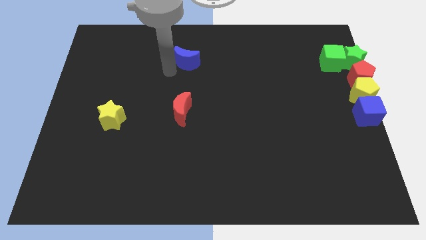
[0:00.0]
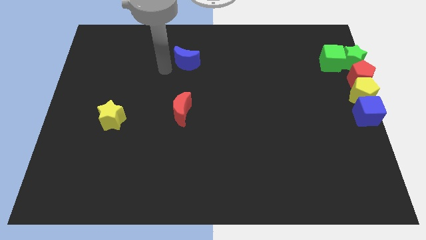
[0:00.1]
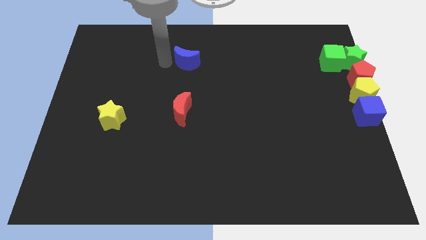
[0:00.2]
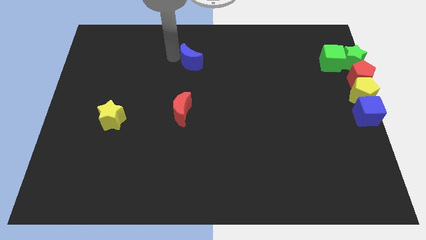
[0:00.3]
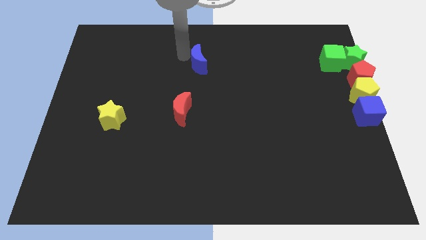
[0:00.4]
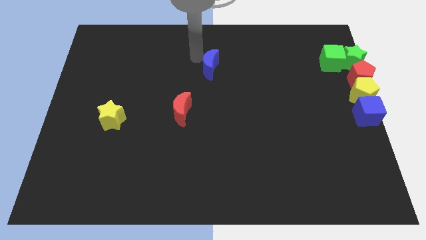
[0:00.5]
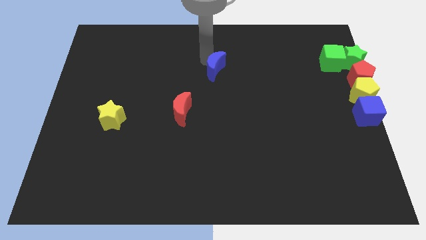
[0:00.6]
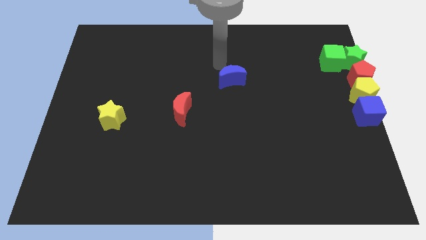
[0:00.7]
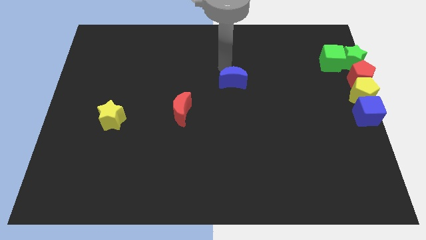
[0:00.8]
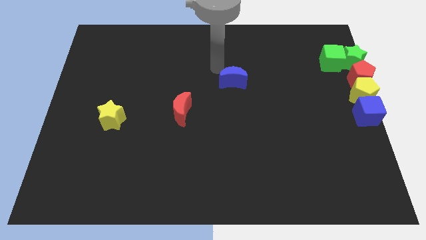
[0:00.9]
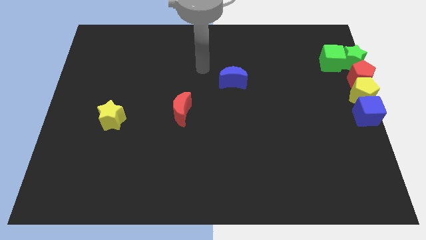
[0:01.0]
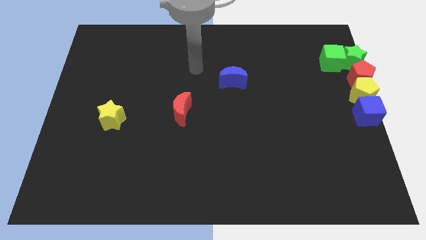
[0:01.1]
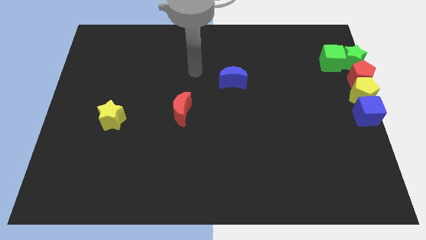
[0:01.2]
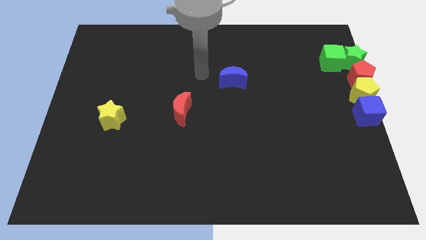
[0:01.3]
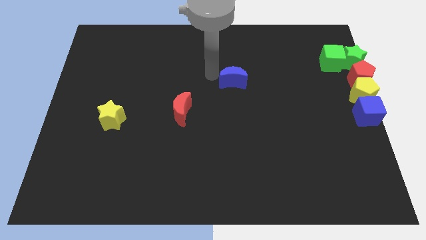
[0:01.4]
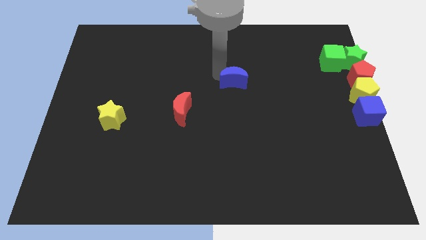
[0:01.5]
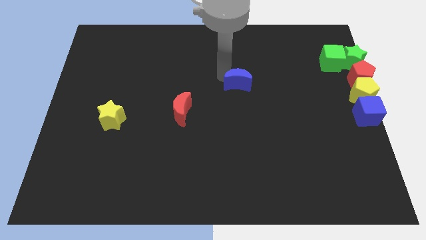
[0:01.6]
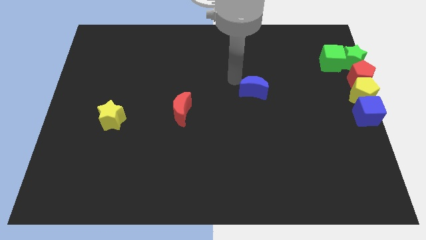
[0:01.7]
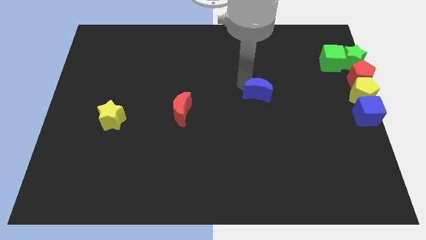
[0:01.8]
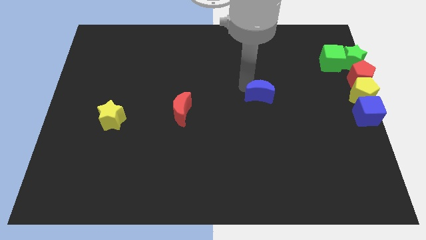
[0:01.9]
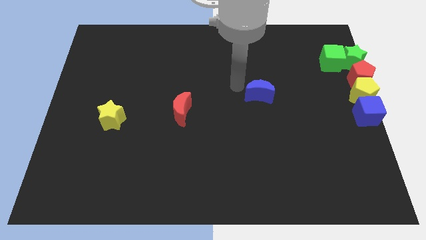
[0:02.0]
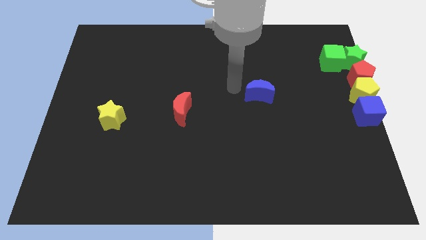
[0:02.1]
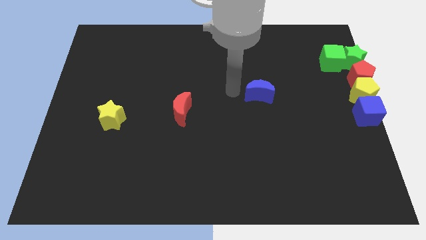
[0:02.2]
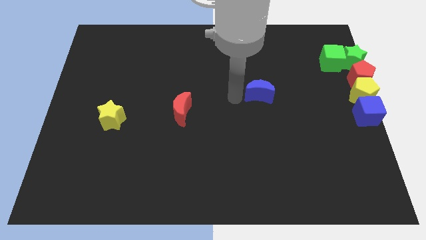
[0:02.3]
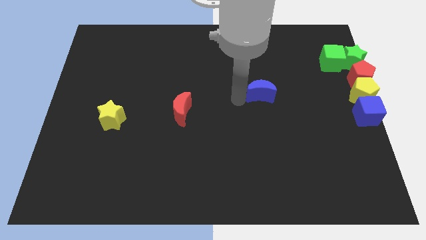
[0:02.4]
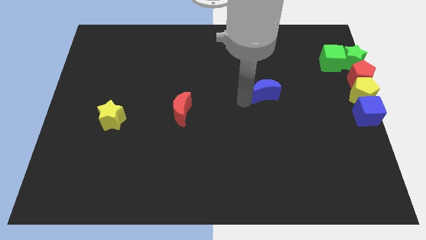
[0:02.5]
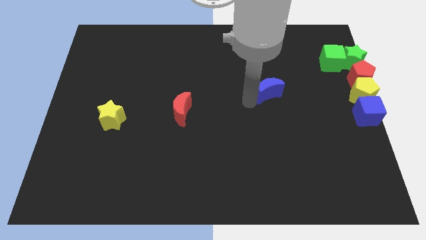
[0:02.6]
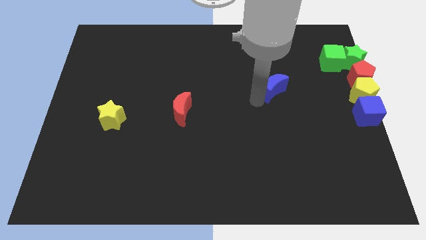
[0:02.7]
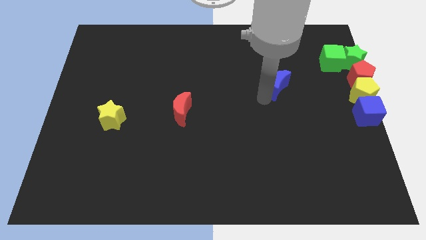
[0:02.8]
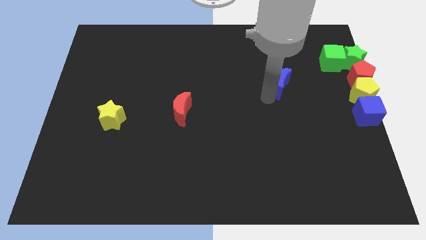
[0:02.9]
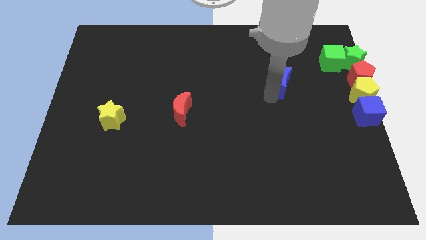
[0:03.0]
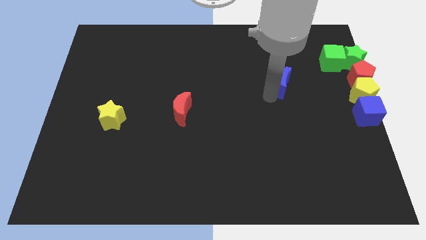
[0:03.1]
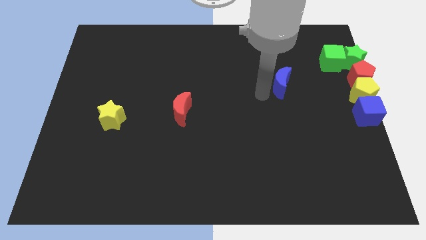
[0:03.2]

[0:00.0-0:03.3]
slide the blue moon towards the red pentagon

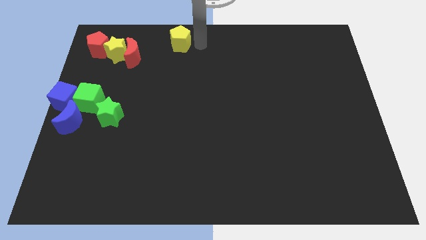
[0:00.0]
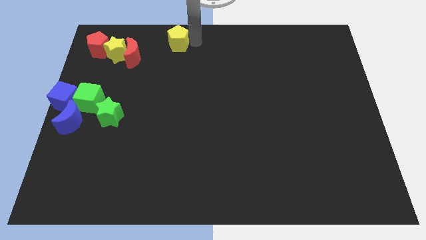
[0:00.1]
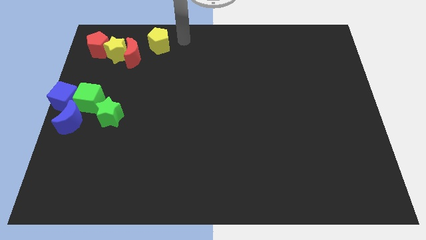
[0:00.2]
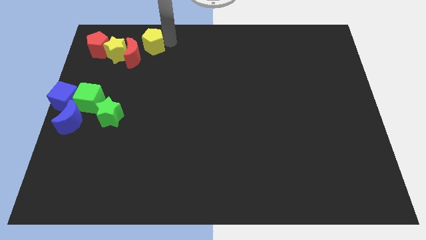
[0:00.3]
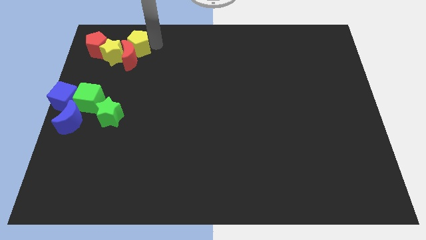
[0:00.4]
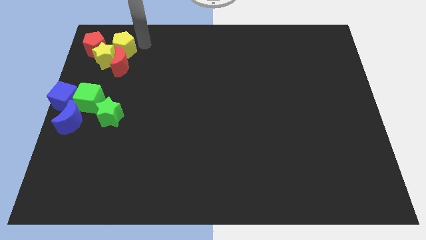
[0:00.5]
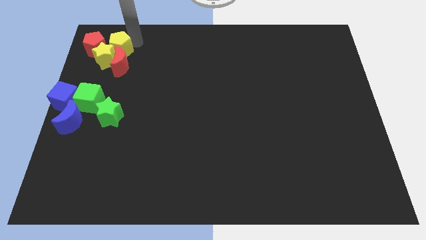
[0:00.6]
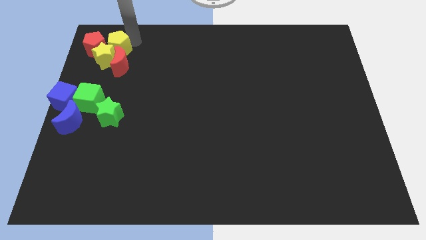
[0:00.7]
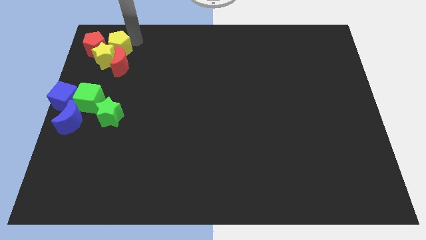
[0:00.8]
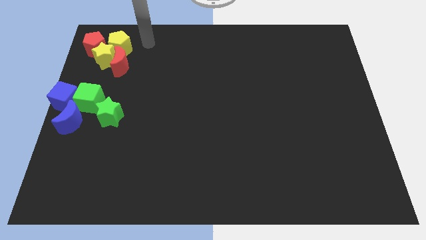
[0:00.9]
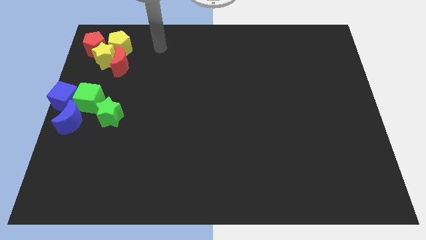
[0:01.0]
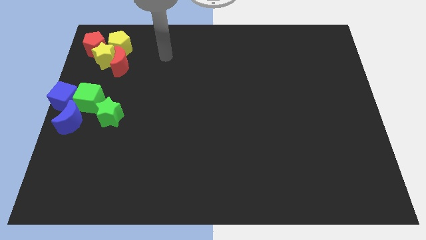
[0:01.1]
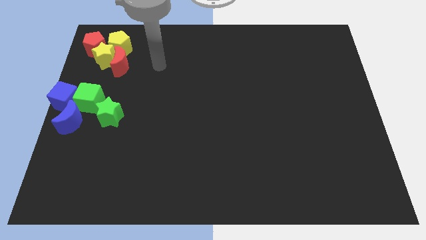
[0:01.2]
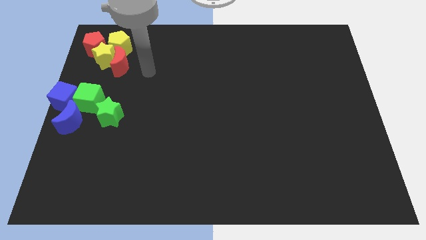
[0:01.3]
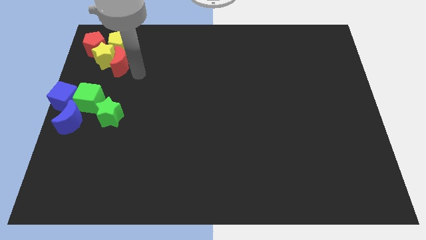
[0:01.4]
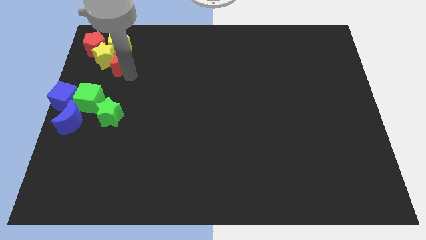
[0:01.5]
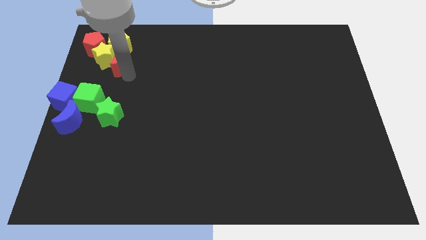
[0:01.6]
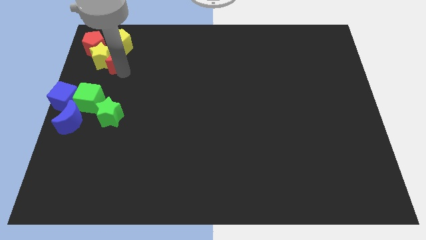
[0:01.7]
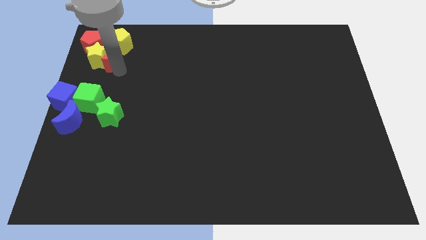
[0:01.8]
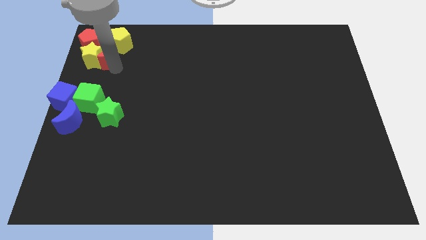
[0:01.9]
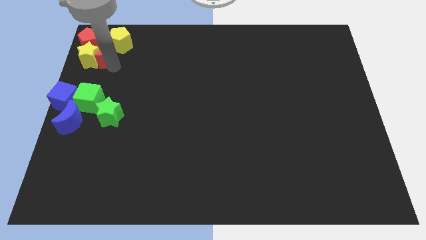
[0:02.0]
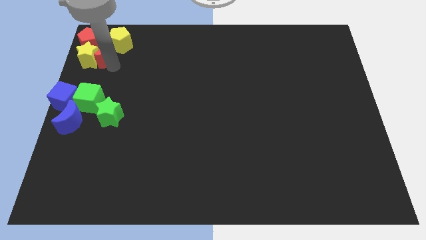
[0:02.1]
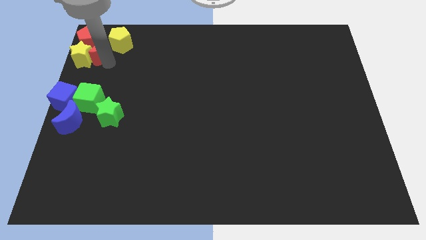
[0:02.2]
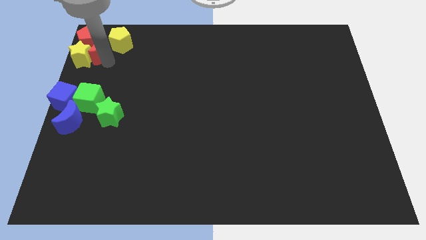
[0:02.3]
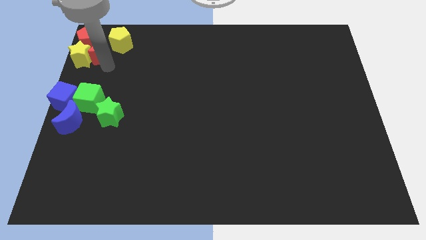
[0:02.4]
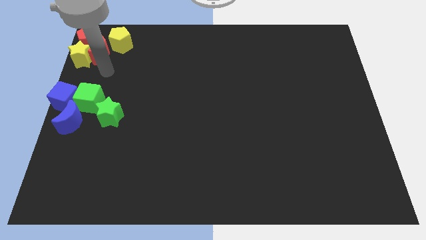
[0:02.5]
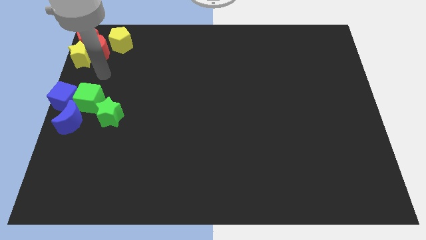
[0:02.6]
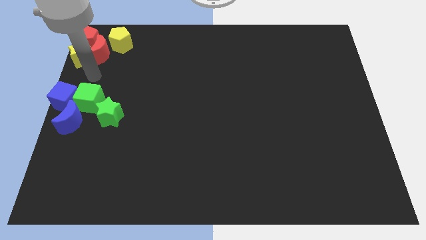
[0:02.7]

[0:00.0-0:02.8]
move the yellow and red blocks to the top left of the board

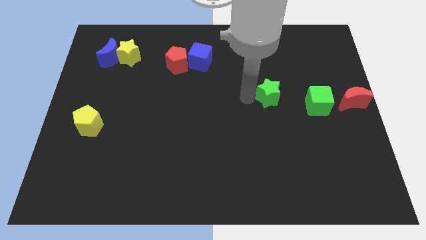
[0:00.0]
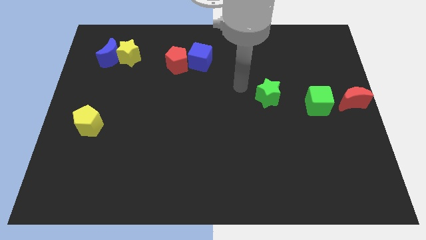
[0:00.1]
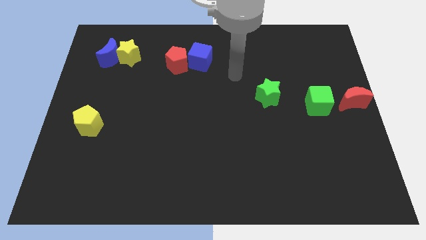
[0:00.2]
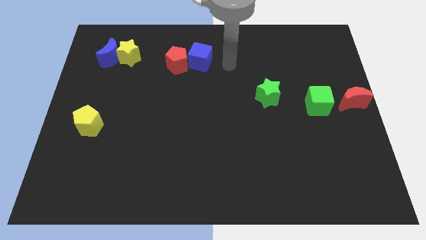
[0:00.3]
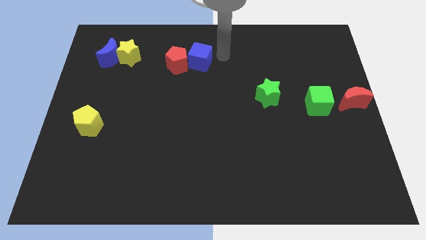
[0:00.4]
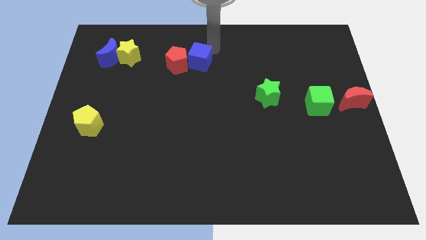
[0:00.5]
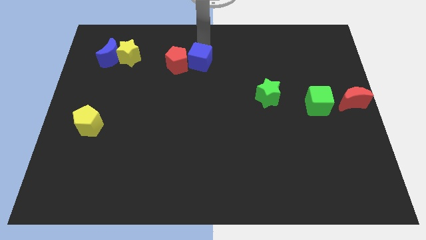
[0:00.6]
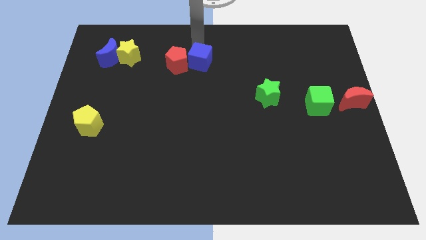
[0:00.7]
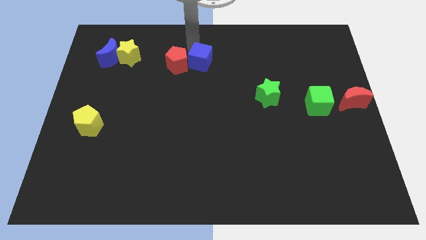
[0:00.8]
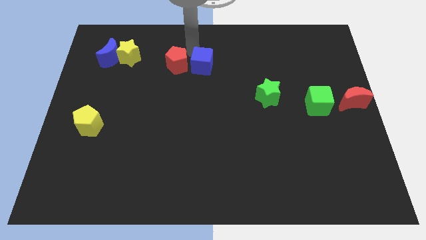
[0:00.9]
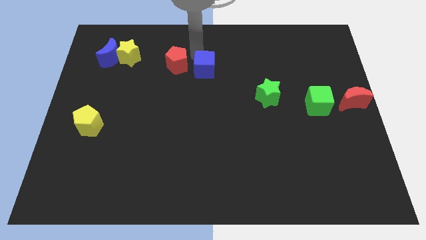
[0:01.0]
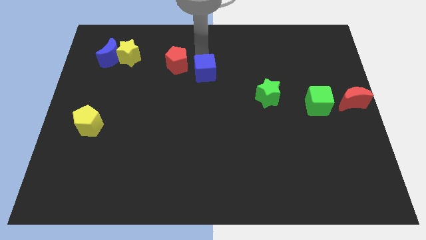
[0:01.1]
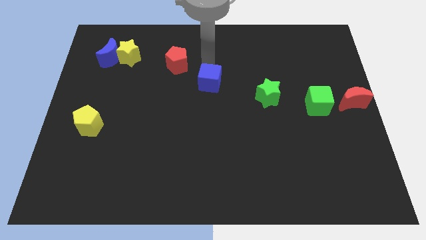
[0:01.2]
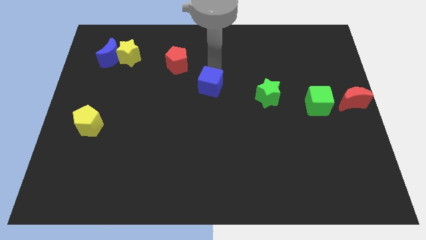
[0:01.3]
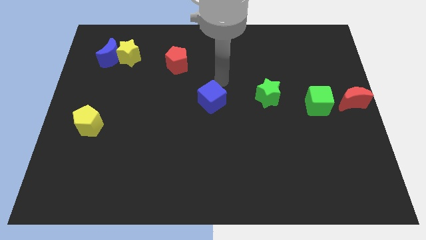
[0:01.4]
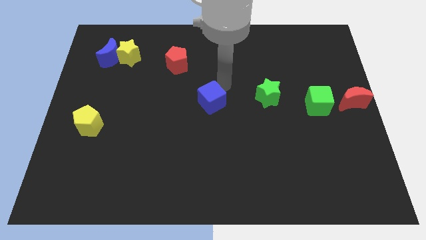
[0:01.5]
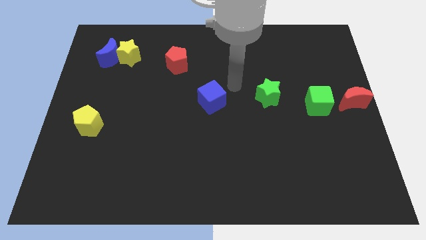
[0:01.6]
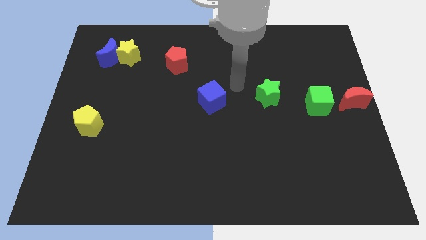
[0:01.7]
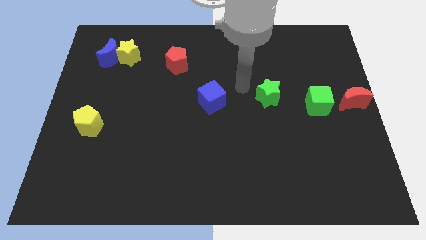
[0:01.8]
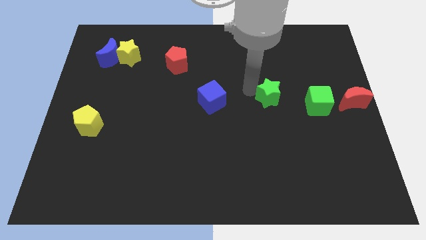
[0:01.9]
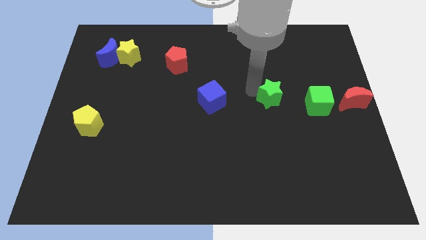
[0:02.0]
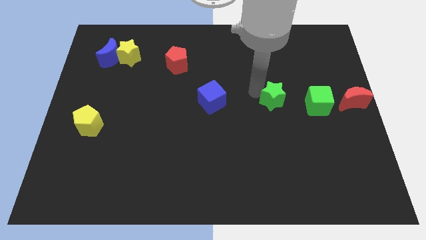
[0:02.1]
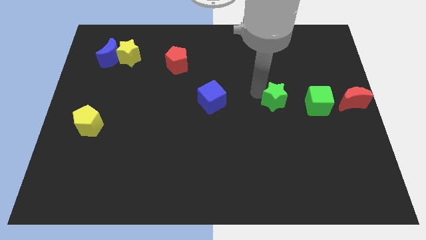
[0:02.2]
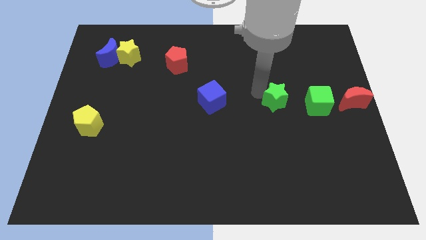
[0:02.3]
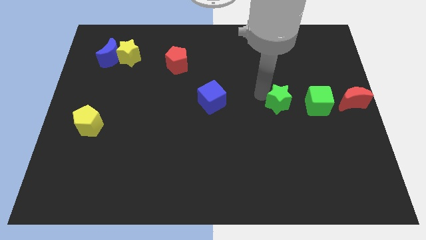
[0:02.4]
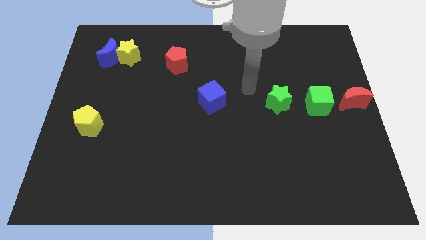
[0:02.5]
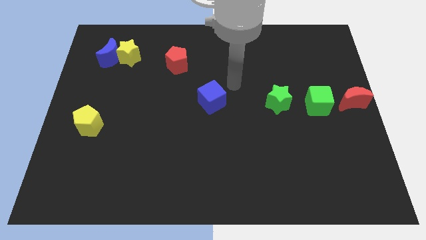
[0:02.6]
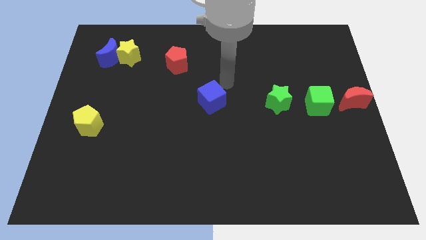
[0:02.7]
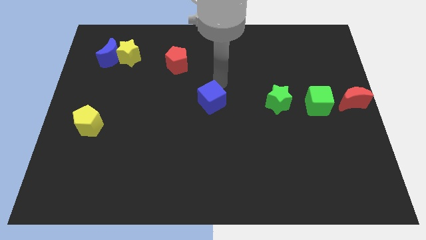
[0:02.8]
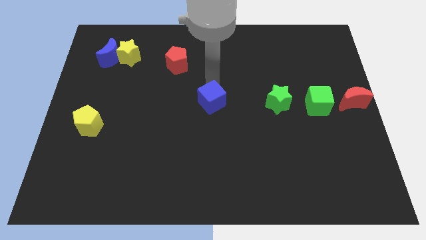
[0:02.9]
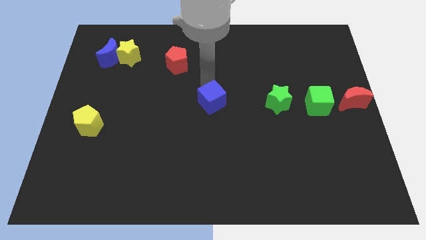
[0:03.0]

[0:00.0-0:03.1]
slide the blue cube towards the center
